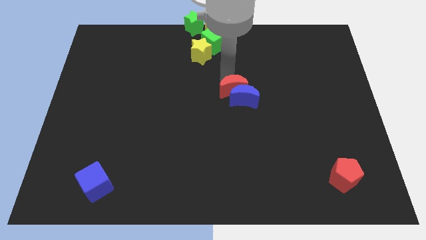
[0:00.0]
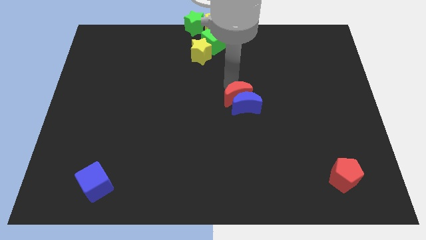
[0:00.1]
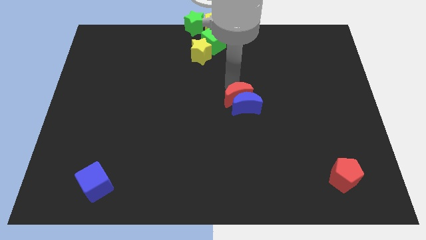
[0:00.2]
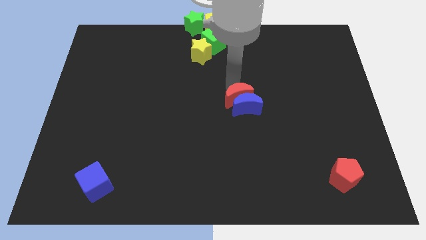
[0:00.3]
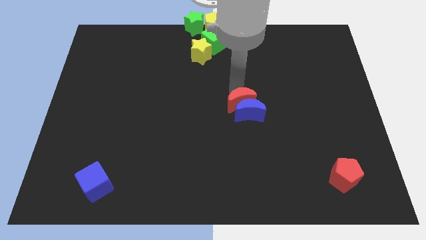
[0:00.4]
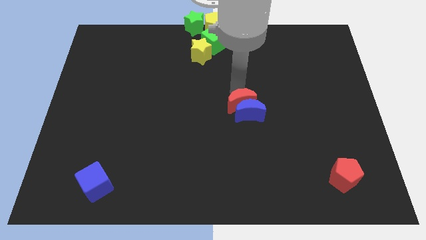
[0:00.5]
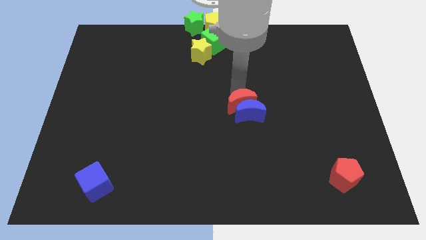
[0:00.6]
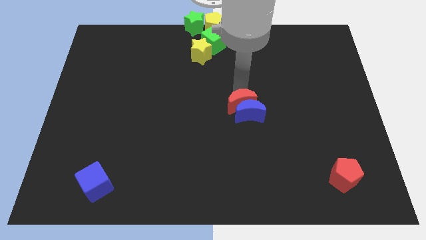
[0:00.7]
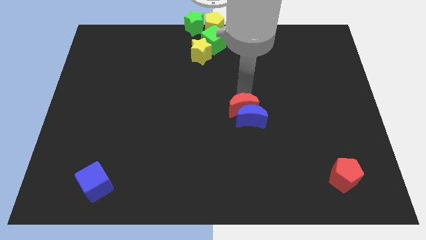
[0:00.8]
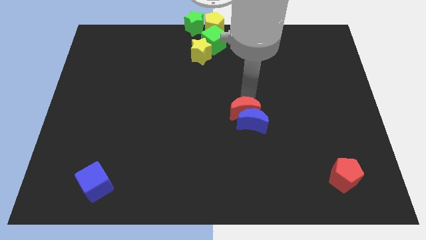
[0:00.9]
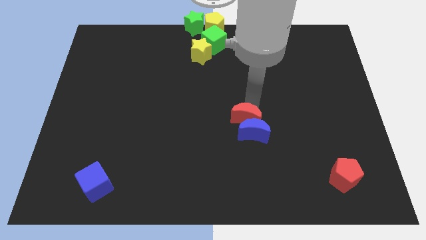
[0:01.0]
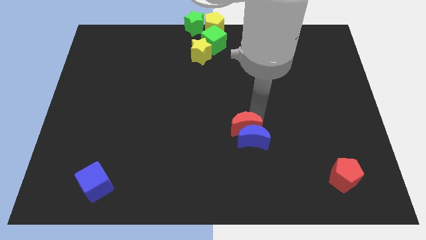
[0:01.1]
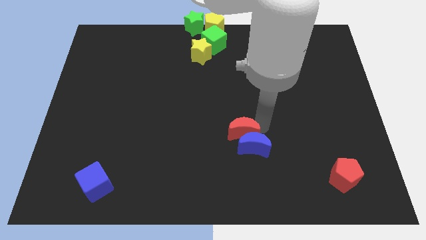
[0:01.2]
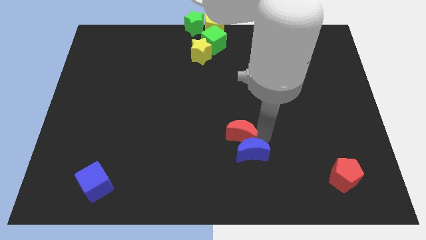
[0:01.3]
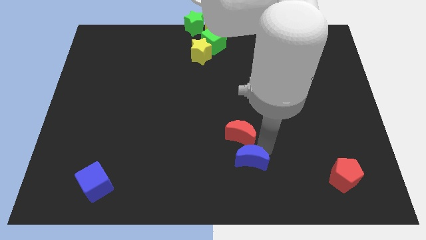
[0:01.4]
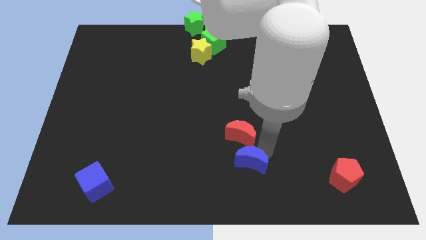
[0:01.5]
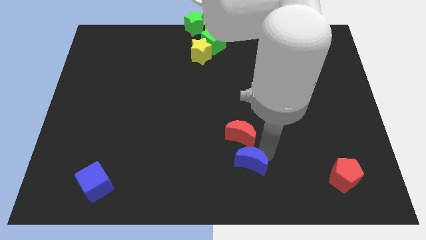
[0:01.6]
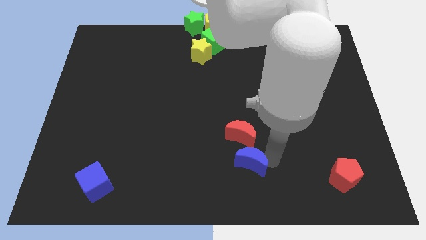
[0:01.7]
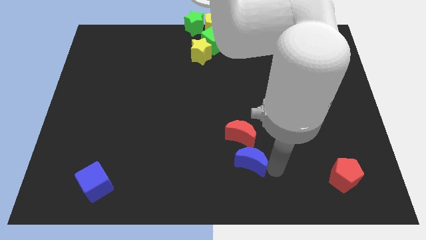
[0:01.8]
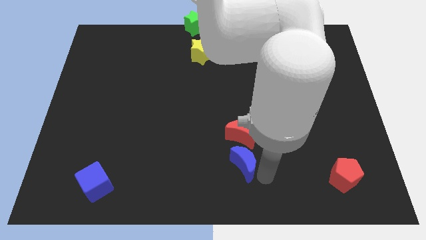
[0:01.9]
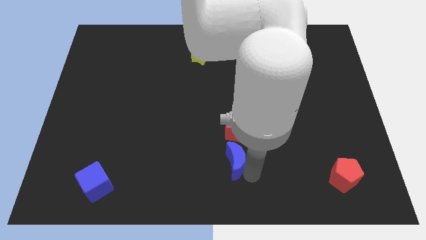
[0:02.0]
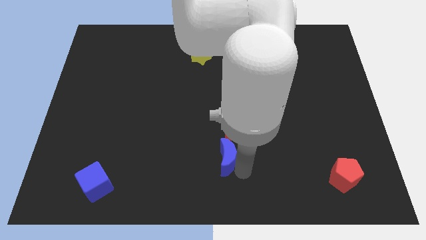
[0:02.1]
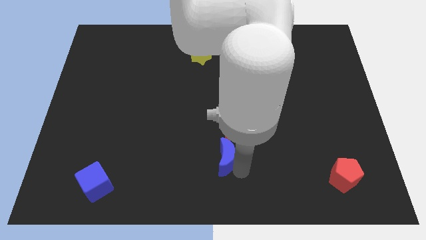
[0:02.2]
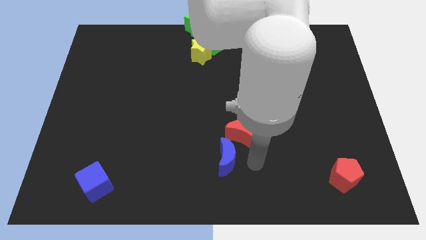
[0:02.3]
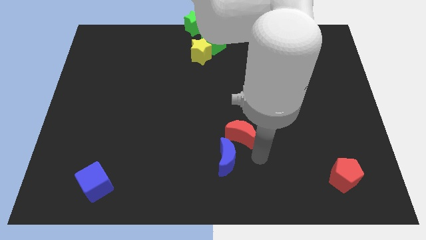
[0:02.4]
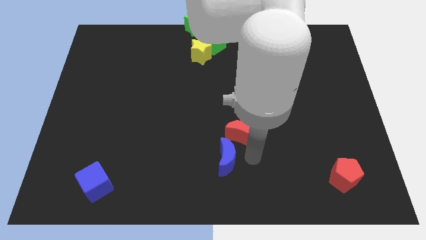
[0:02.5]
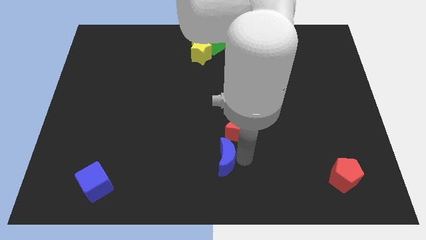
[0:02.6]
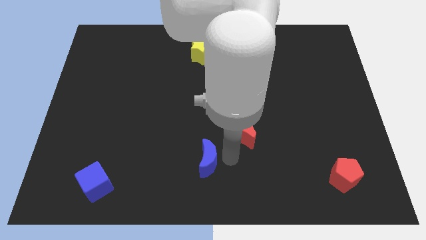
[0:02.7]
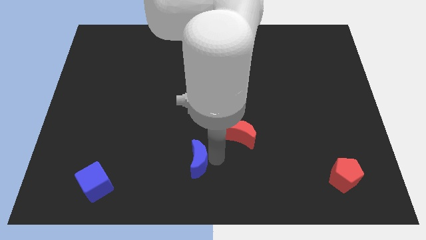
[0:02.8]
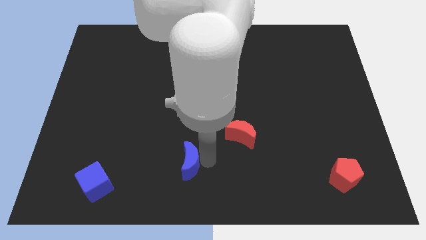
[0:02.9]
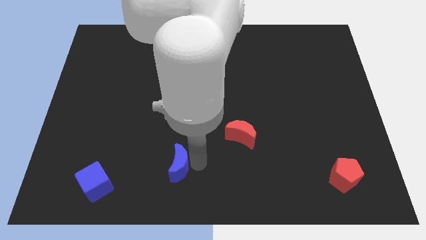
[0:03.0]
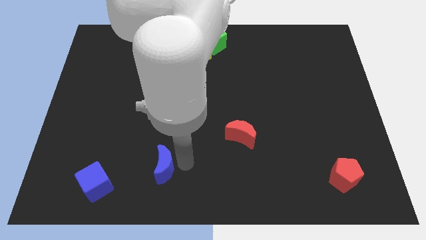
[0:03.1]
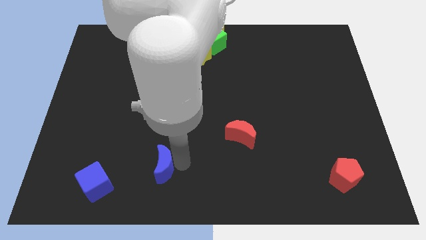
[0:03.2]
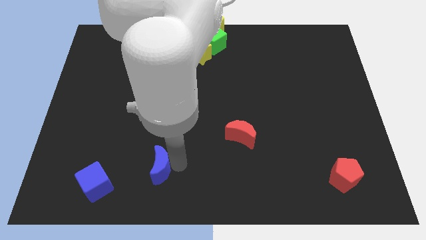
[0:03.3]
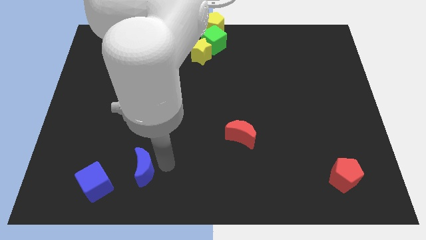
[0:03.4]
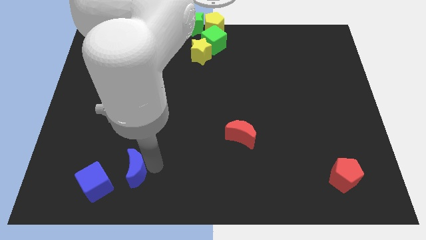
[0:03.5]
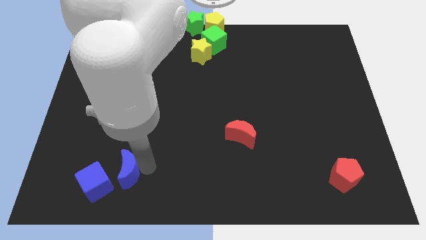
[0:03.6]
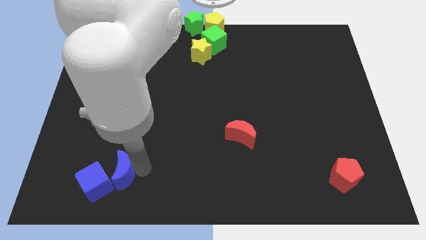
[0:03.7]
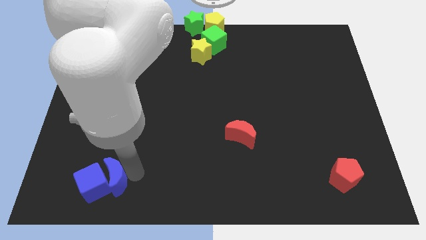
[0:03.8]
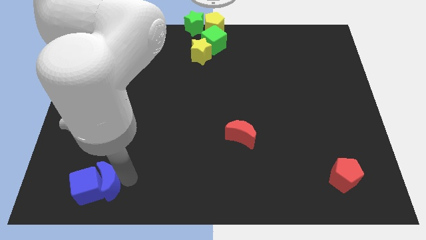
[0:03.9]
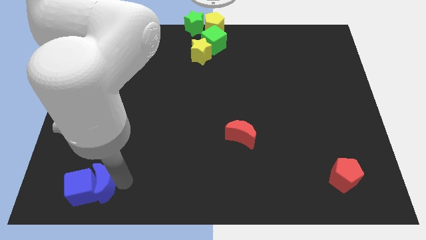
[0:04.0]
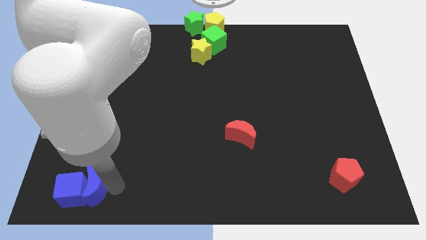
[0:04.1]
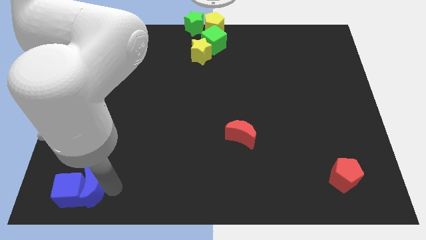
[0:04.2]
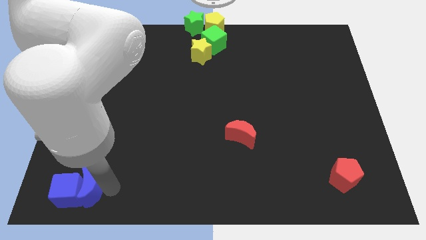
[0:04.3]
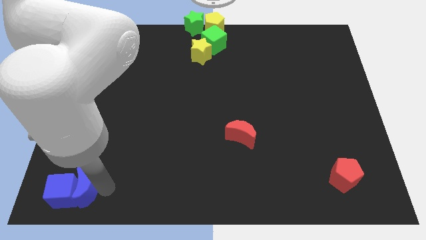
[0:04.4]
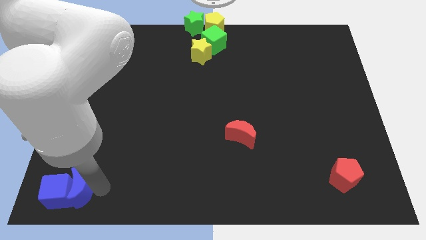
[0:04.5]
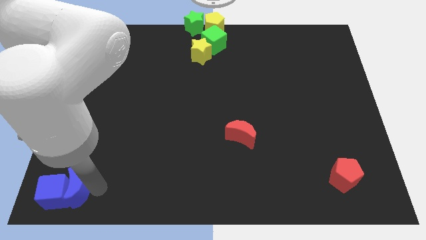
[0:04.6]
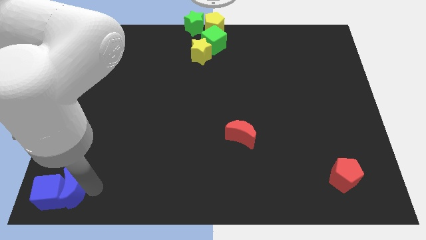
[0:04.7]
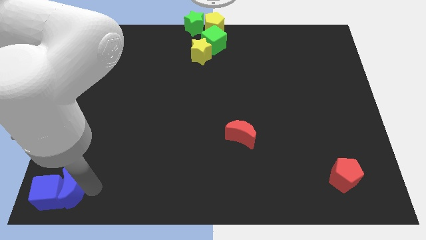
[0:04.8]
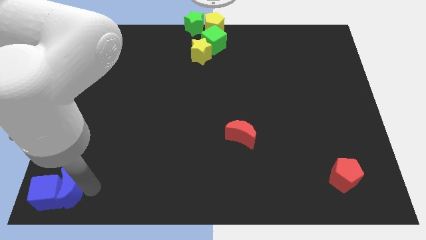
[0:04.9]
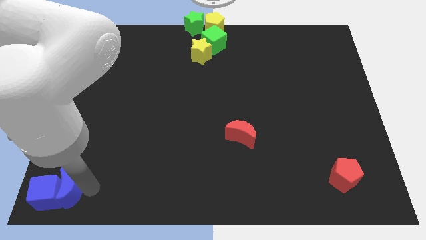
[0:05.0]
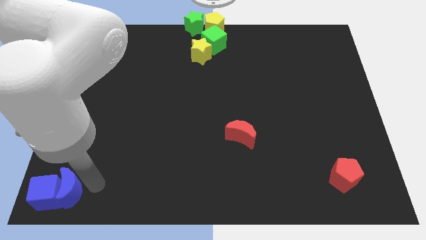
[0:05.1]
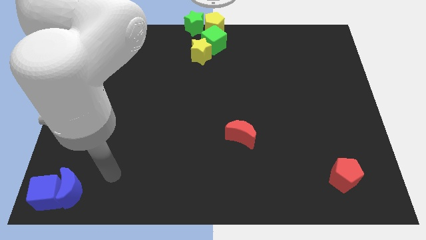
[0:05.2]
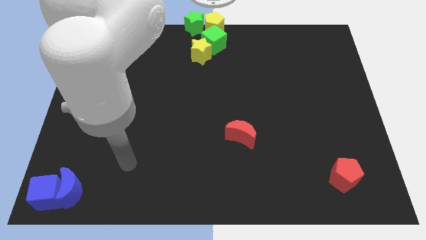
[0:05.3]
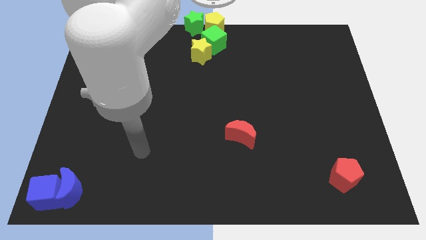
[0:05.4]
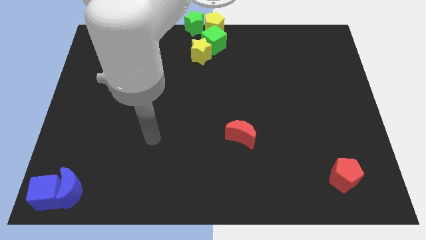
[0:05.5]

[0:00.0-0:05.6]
place the blue crescent along with the blue cube at the bottom left corner of the board

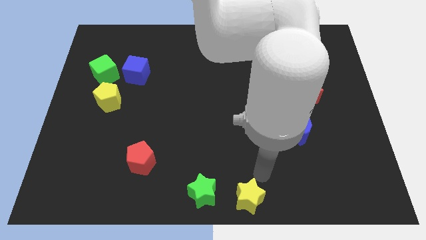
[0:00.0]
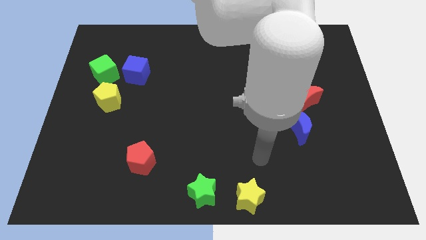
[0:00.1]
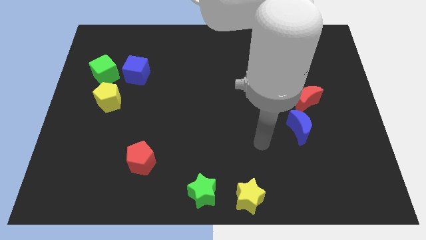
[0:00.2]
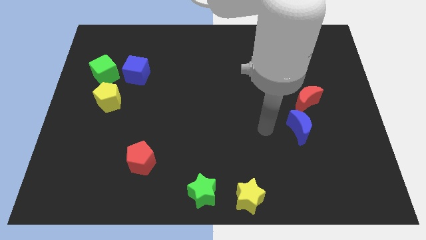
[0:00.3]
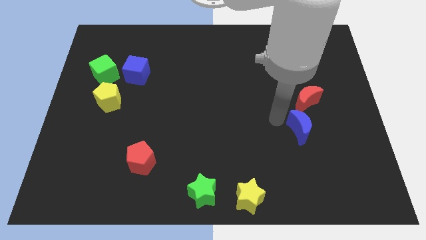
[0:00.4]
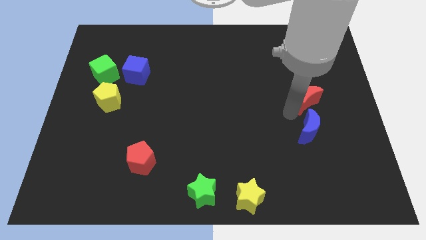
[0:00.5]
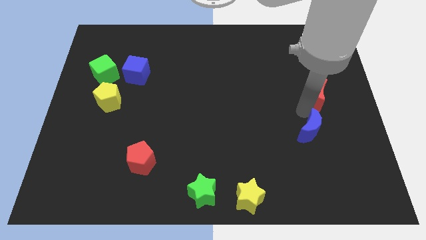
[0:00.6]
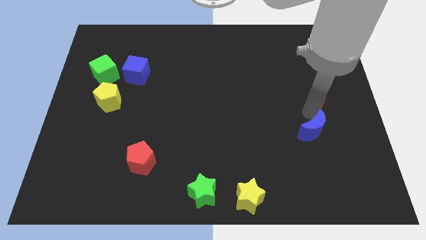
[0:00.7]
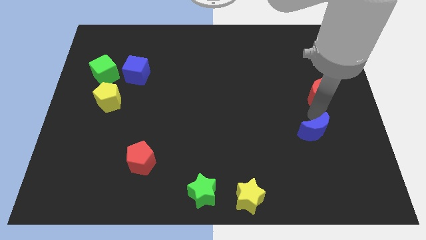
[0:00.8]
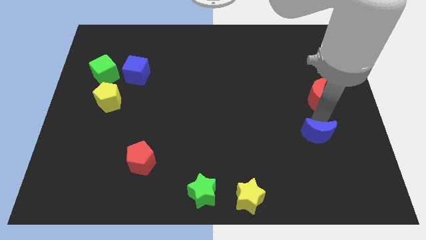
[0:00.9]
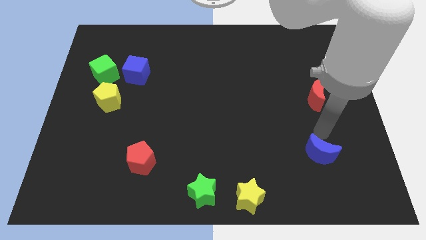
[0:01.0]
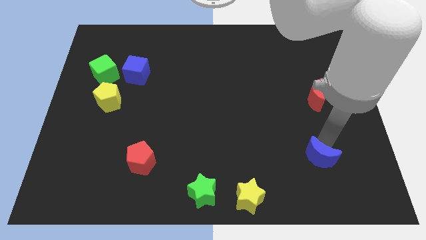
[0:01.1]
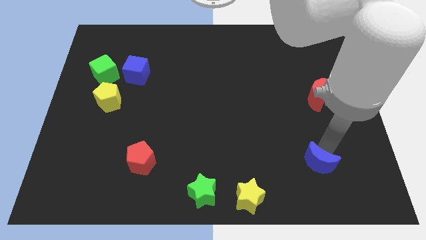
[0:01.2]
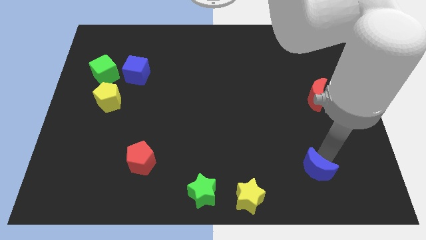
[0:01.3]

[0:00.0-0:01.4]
move the blue crescent towards yellow star

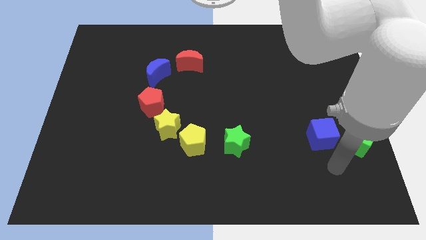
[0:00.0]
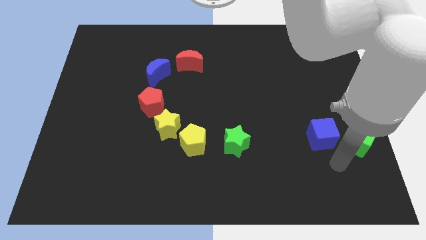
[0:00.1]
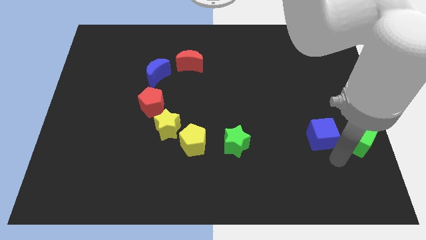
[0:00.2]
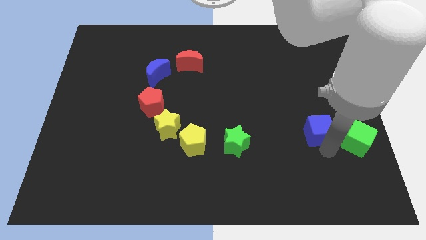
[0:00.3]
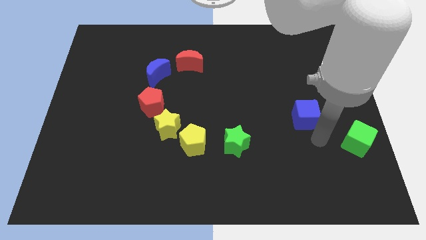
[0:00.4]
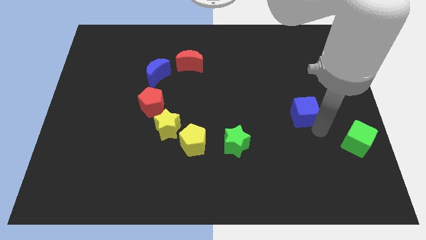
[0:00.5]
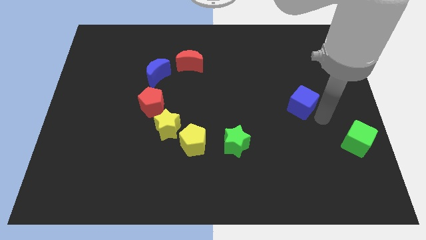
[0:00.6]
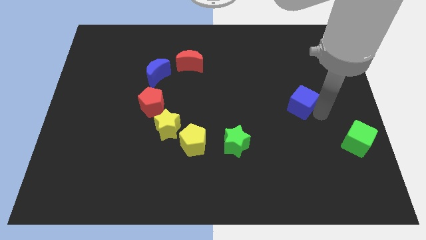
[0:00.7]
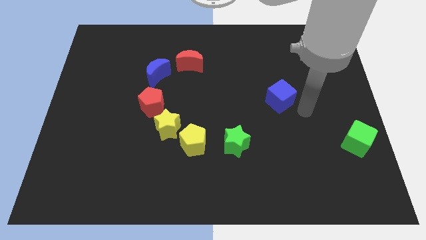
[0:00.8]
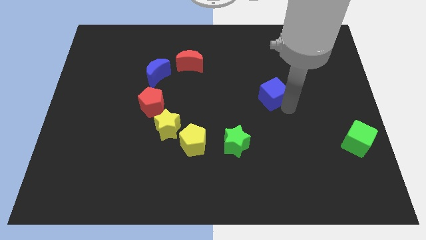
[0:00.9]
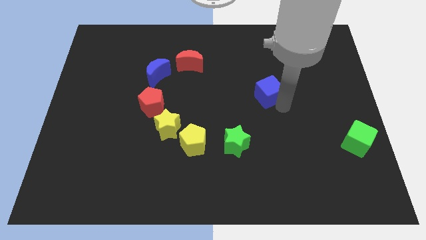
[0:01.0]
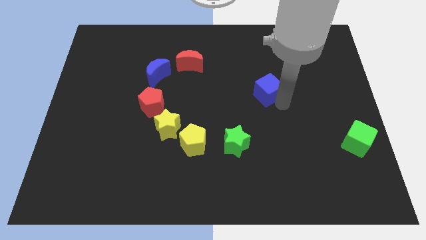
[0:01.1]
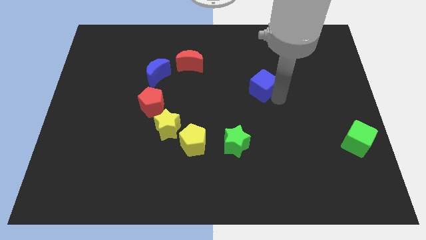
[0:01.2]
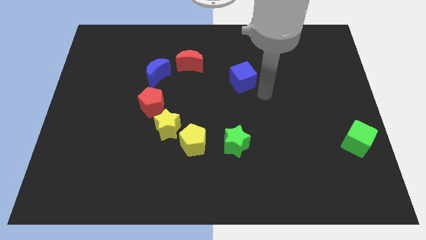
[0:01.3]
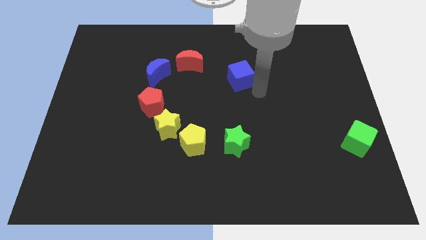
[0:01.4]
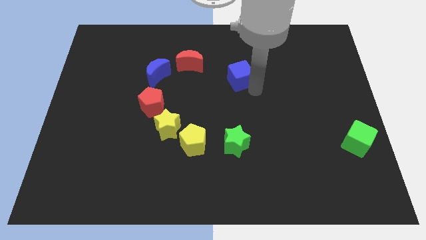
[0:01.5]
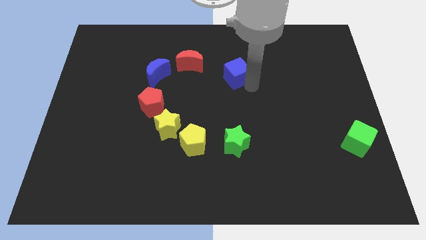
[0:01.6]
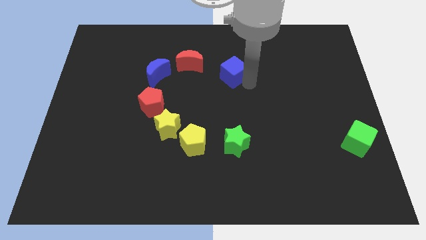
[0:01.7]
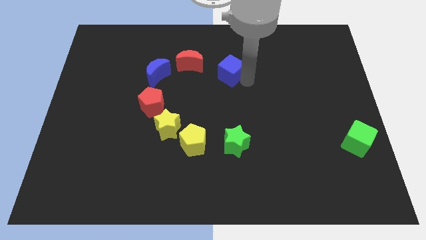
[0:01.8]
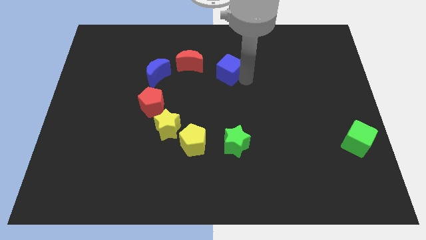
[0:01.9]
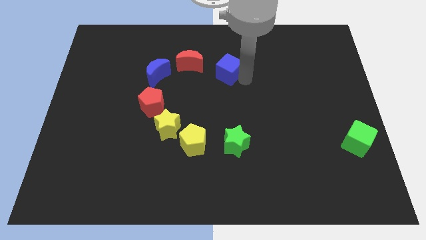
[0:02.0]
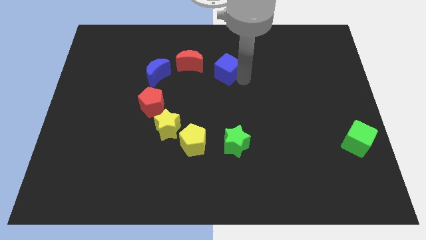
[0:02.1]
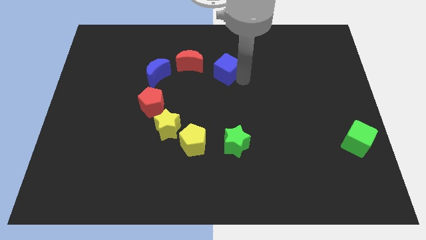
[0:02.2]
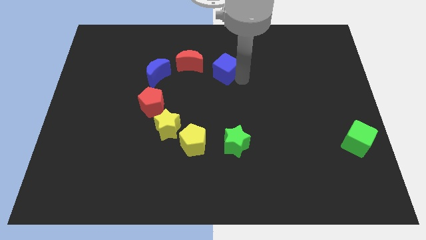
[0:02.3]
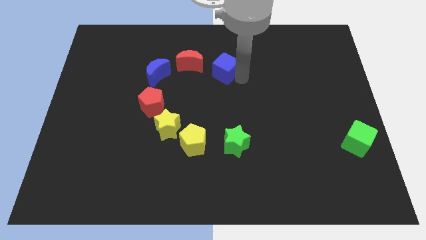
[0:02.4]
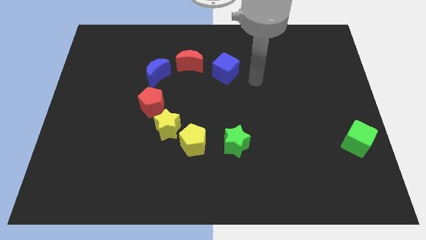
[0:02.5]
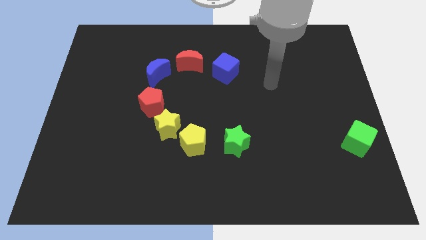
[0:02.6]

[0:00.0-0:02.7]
move the blue cube to the right of the red crescent
